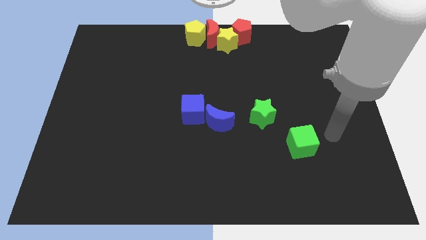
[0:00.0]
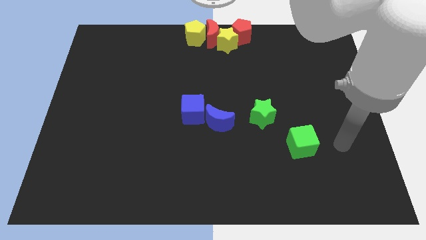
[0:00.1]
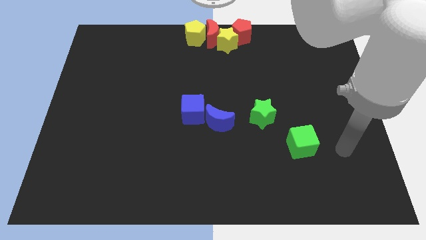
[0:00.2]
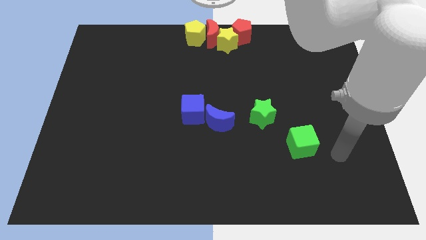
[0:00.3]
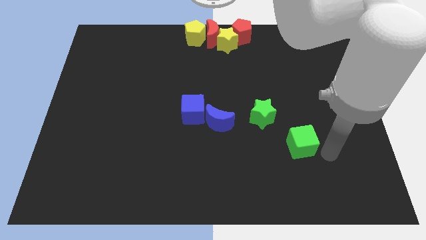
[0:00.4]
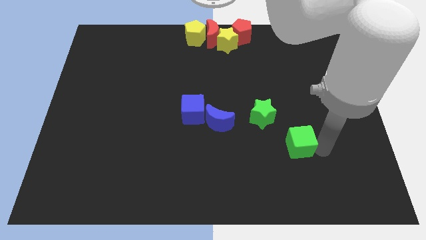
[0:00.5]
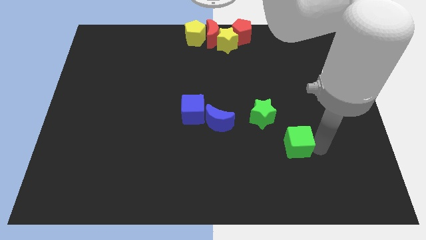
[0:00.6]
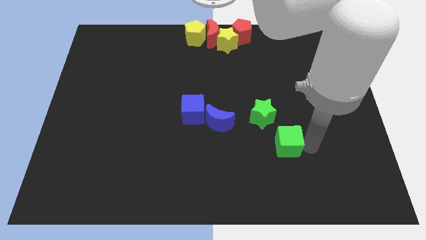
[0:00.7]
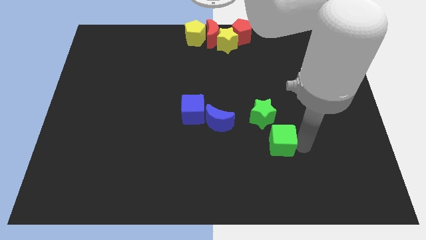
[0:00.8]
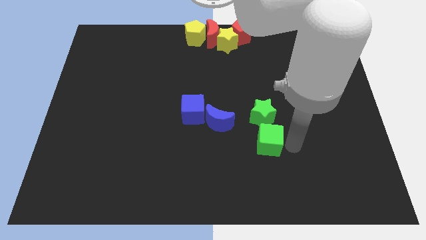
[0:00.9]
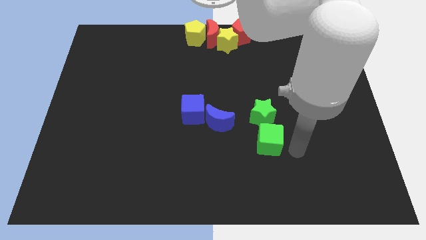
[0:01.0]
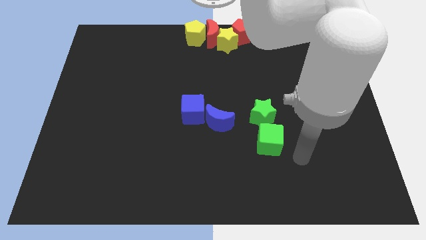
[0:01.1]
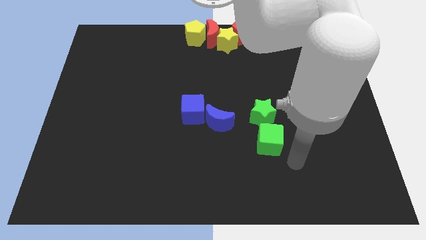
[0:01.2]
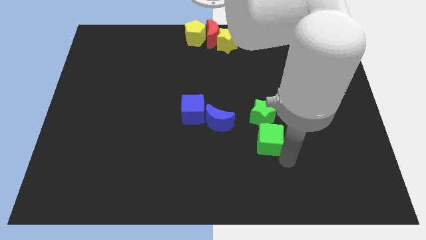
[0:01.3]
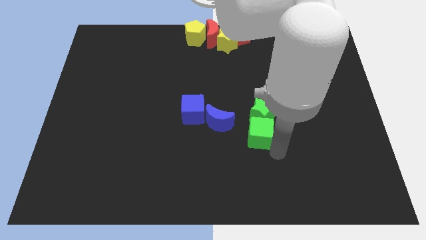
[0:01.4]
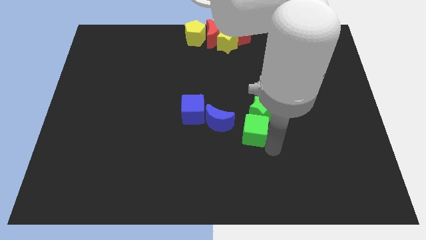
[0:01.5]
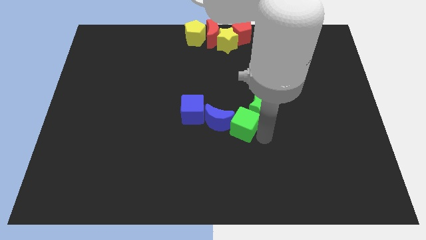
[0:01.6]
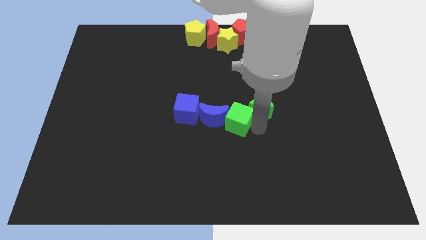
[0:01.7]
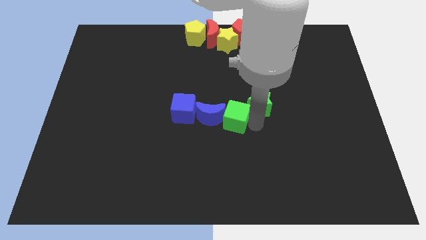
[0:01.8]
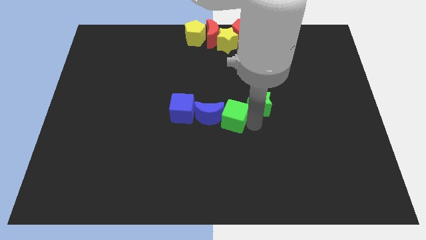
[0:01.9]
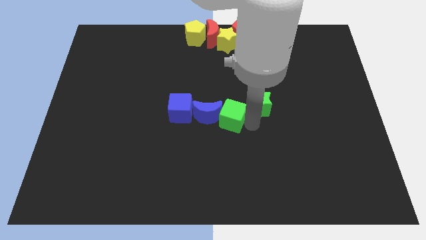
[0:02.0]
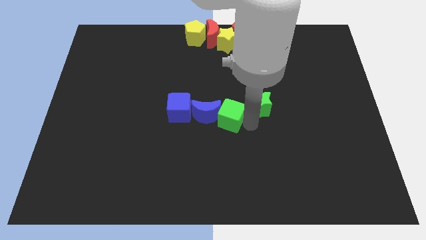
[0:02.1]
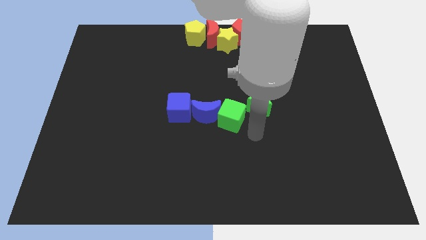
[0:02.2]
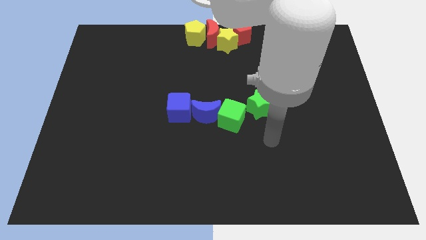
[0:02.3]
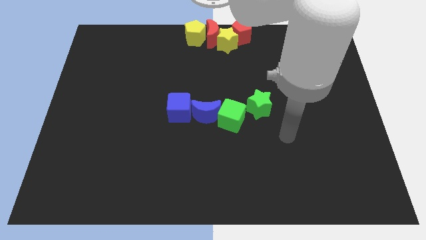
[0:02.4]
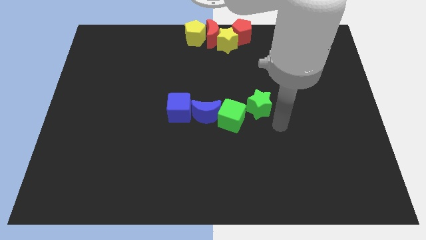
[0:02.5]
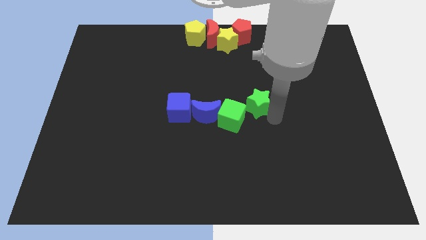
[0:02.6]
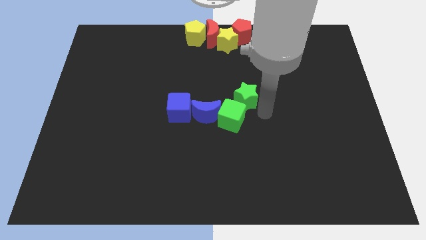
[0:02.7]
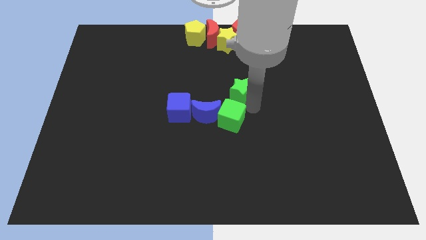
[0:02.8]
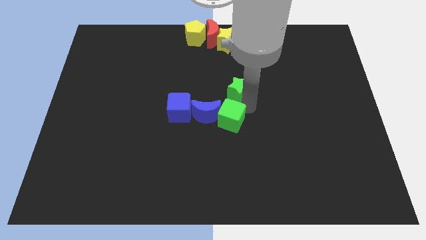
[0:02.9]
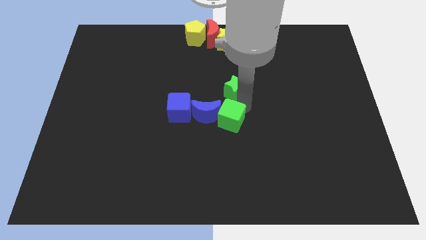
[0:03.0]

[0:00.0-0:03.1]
move green cube below the green star

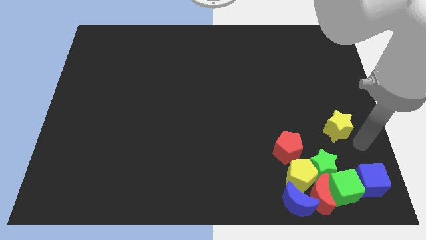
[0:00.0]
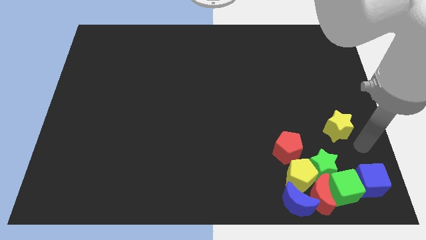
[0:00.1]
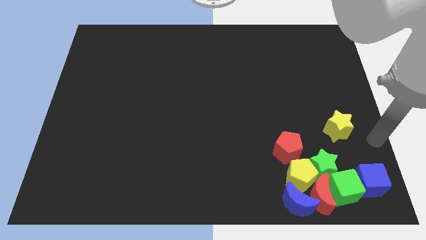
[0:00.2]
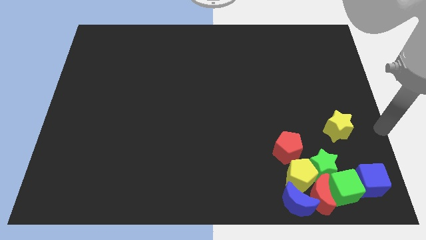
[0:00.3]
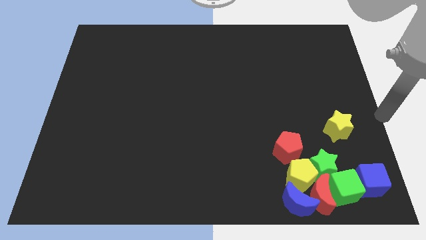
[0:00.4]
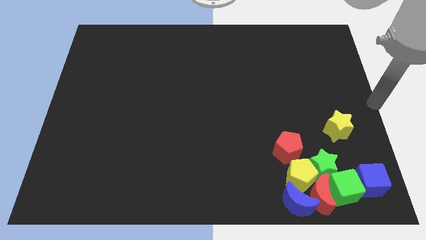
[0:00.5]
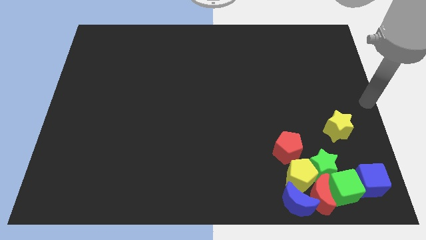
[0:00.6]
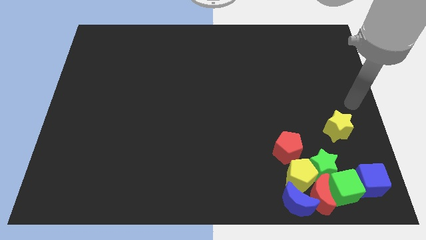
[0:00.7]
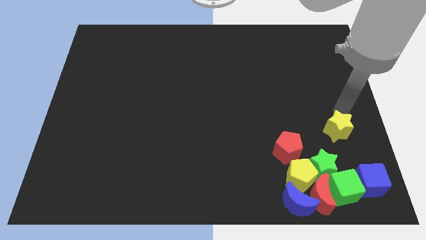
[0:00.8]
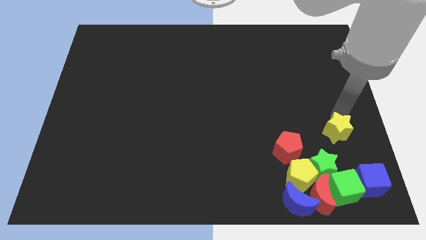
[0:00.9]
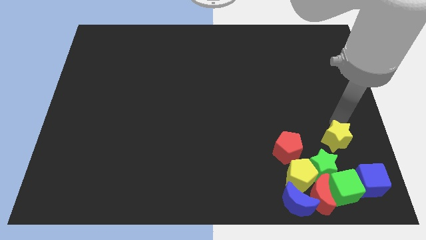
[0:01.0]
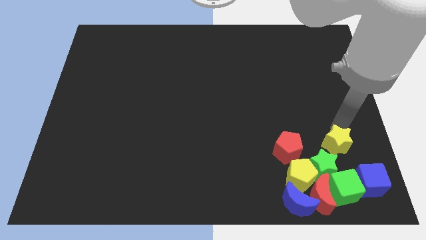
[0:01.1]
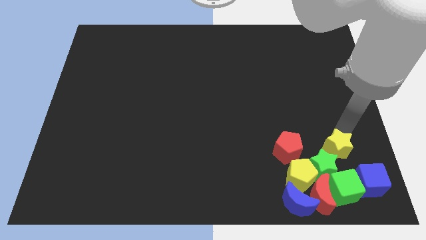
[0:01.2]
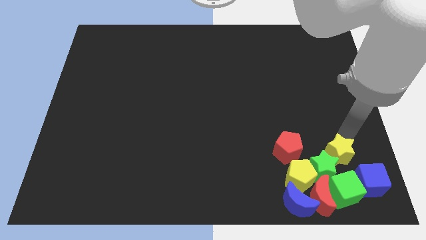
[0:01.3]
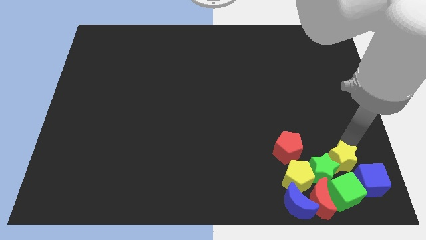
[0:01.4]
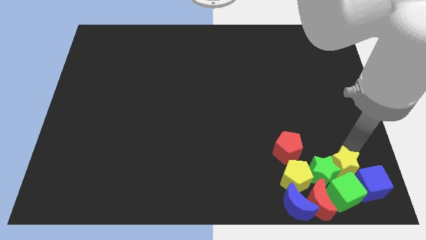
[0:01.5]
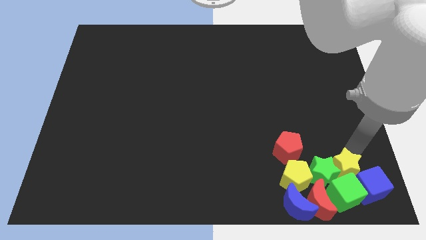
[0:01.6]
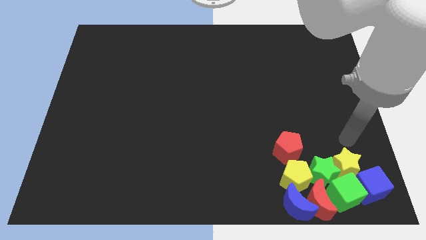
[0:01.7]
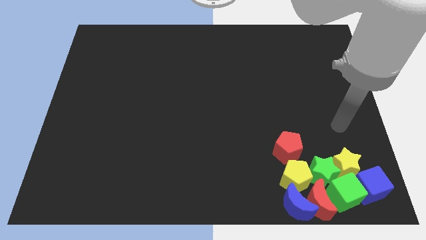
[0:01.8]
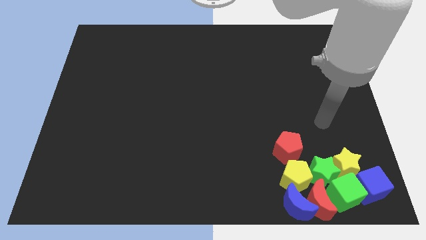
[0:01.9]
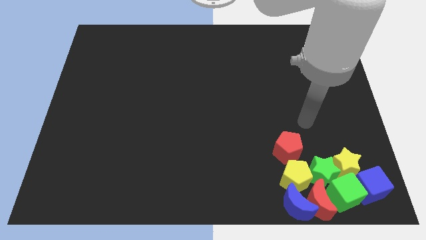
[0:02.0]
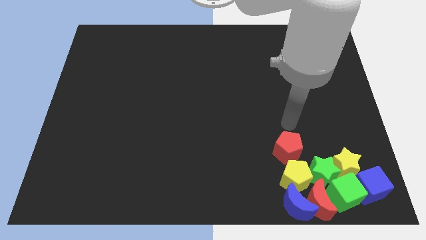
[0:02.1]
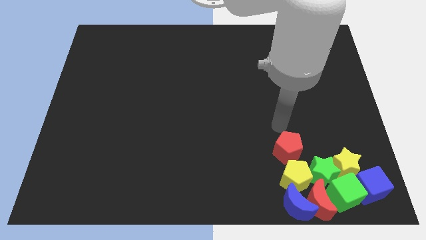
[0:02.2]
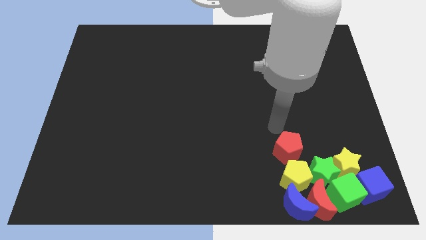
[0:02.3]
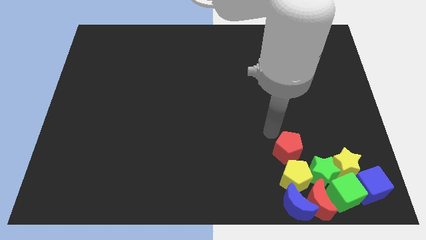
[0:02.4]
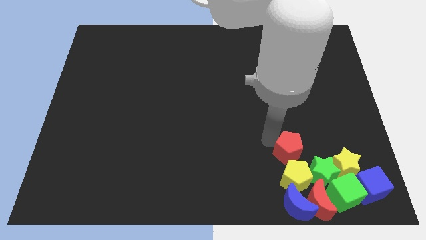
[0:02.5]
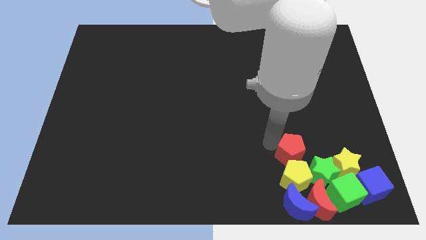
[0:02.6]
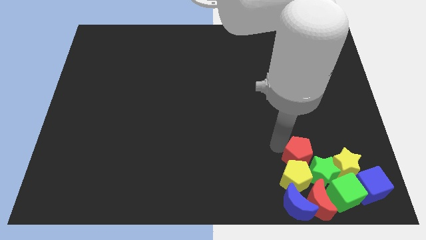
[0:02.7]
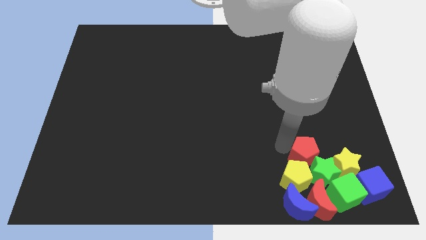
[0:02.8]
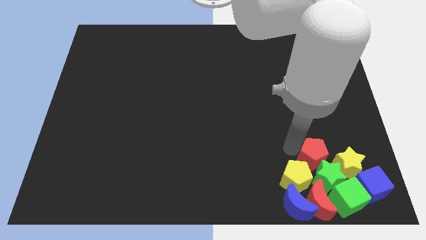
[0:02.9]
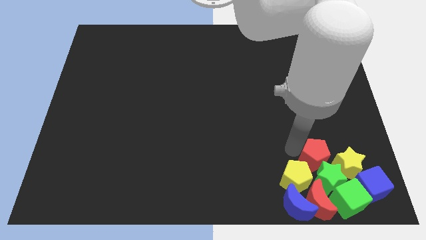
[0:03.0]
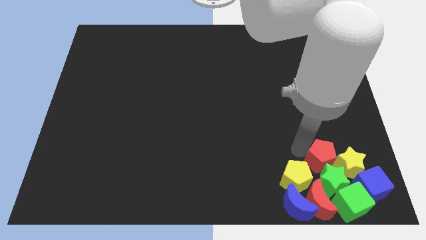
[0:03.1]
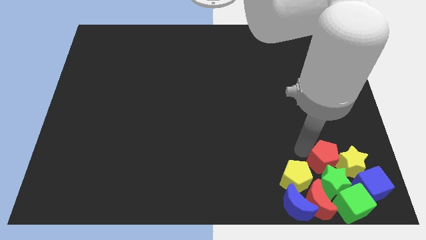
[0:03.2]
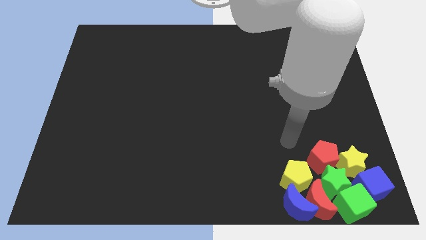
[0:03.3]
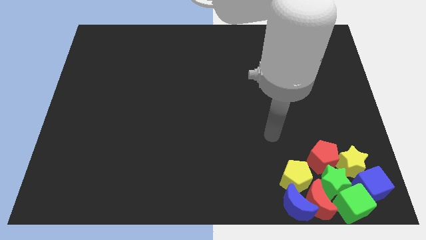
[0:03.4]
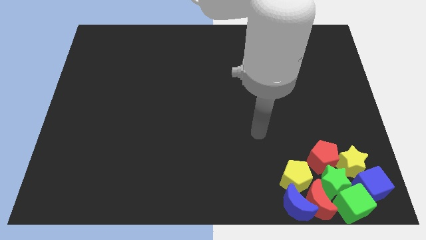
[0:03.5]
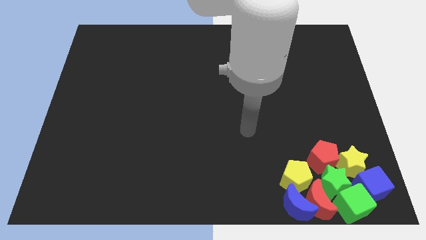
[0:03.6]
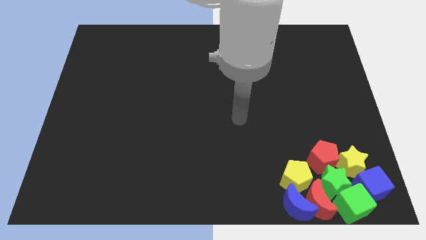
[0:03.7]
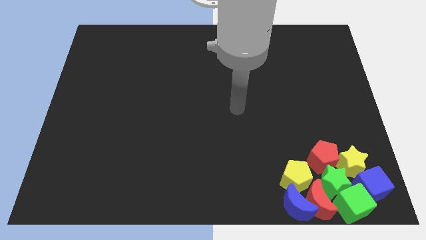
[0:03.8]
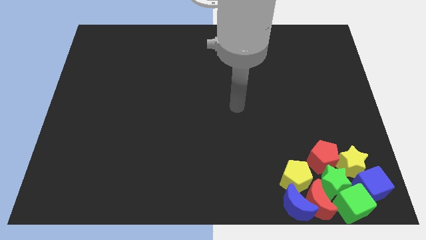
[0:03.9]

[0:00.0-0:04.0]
push the yellow star and red pentagon towards green star

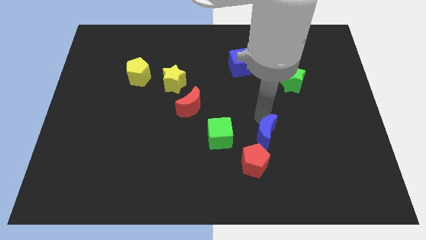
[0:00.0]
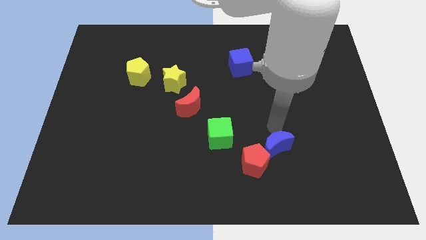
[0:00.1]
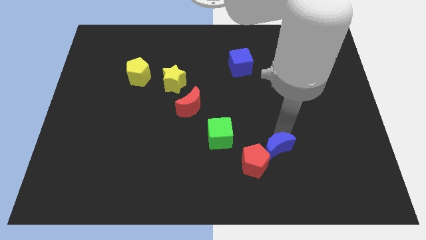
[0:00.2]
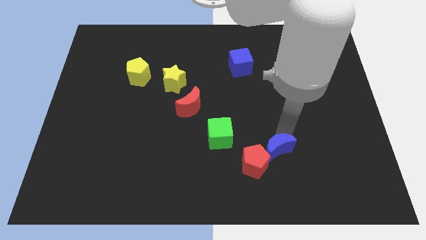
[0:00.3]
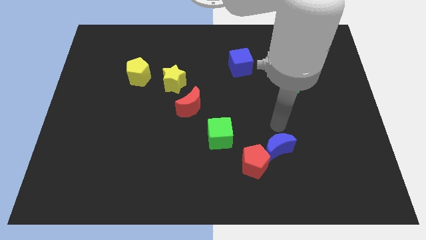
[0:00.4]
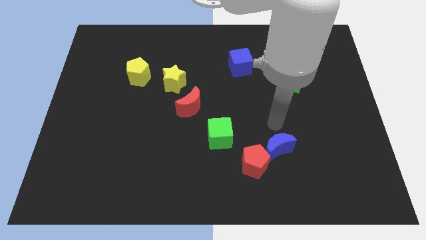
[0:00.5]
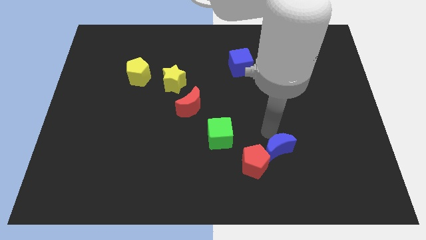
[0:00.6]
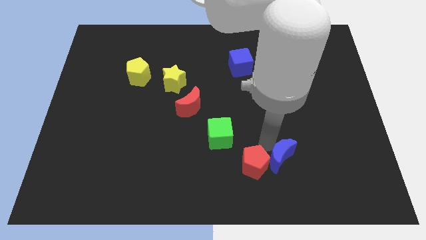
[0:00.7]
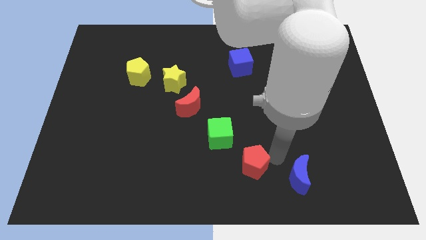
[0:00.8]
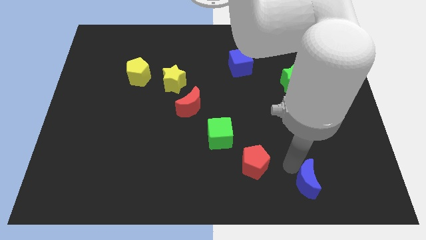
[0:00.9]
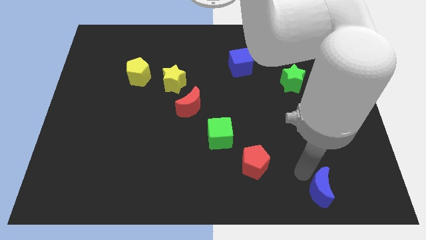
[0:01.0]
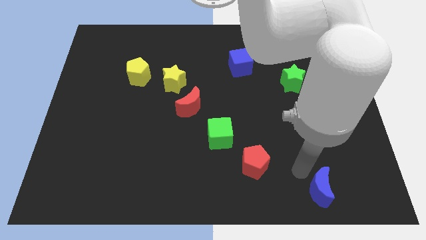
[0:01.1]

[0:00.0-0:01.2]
separate the blue crescent from red pentagon

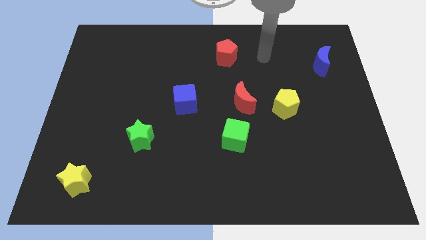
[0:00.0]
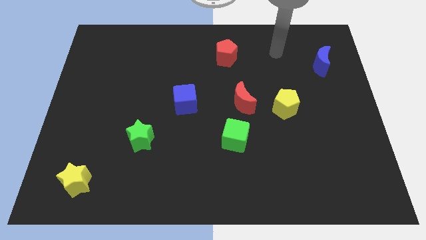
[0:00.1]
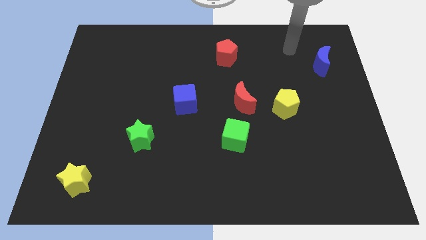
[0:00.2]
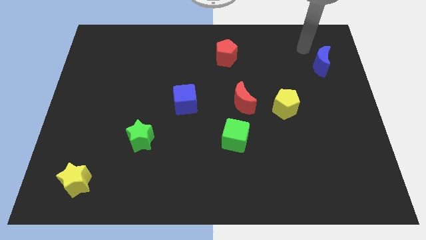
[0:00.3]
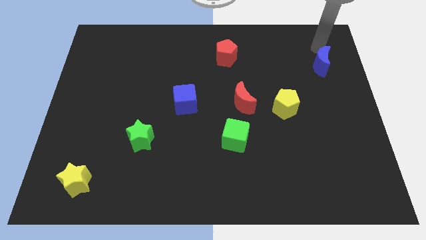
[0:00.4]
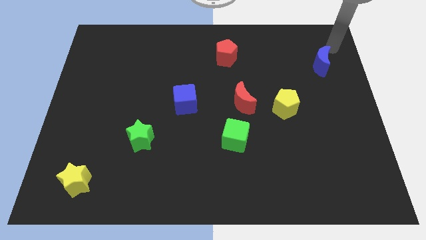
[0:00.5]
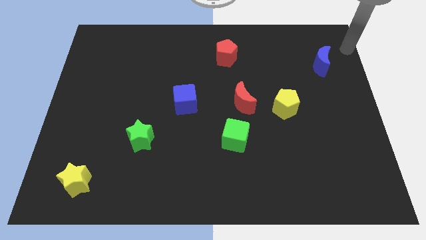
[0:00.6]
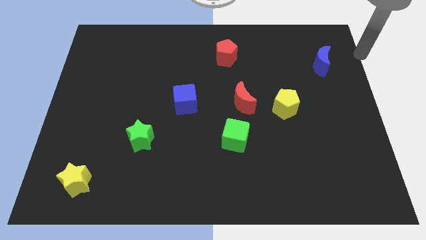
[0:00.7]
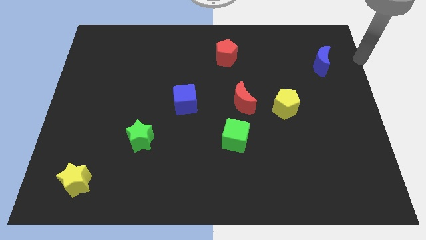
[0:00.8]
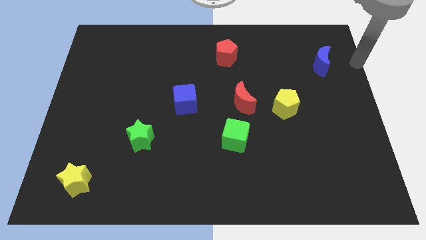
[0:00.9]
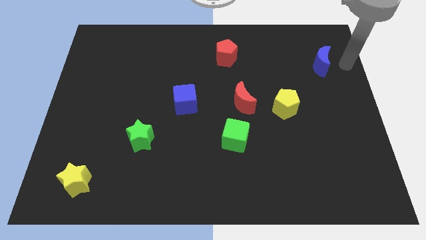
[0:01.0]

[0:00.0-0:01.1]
move the arm right to the blue crescent
